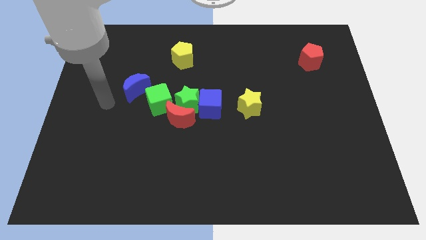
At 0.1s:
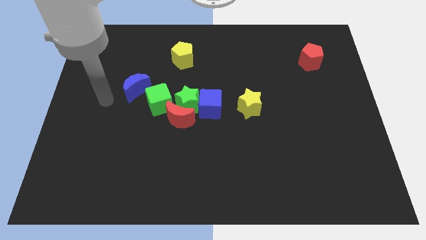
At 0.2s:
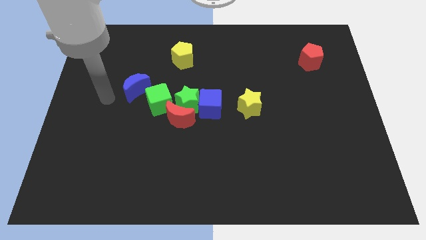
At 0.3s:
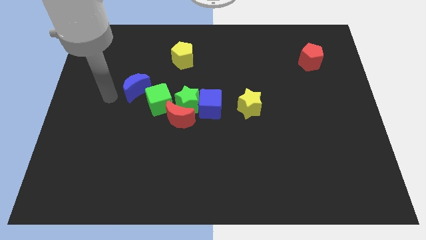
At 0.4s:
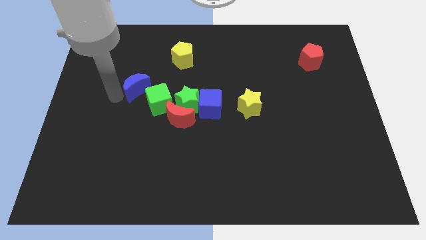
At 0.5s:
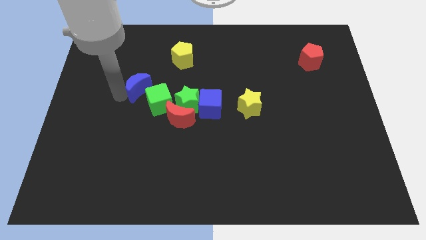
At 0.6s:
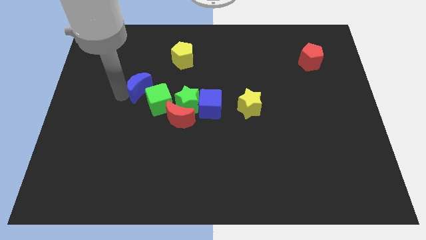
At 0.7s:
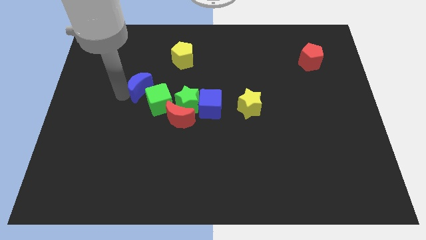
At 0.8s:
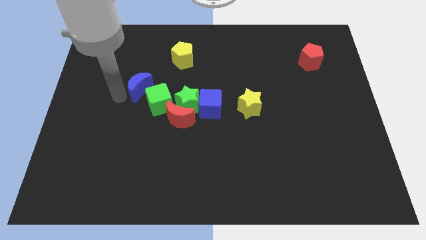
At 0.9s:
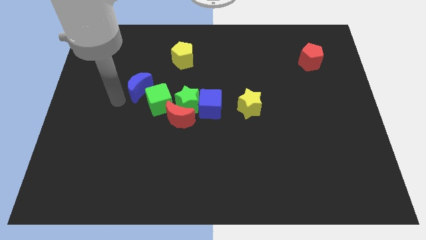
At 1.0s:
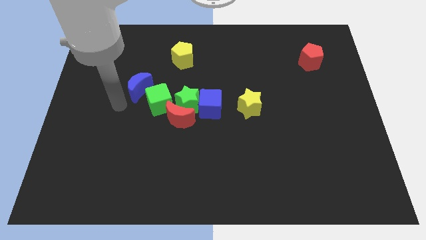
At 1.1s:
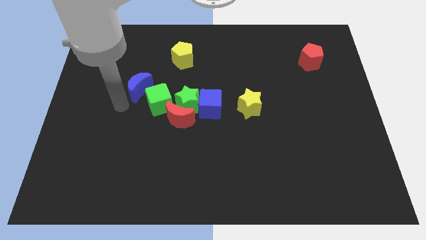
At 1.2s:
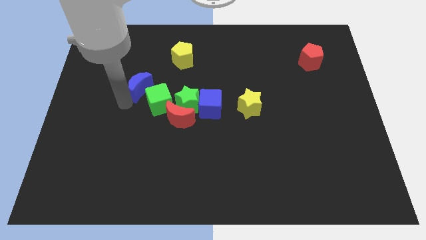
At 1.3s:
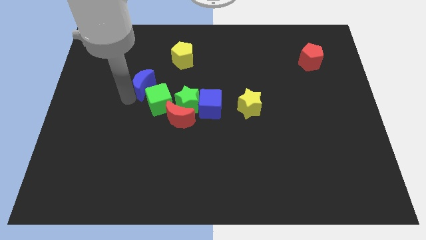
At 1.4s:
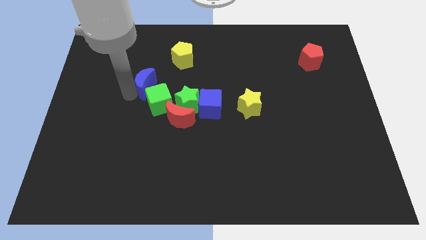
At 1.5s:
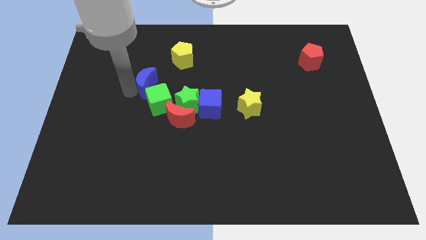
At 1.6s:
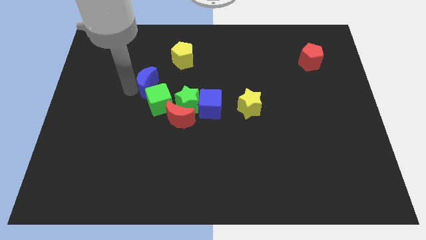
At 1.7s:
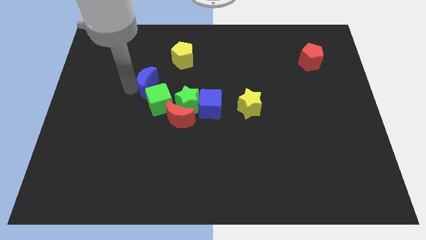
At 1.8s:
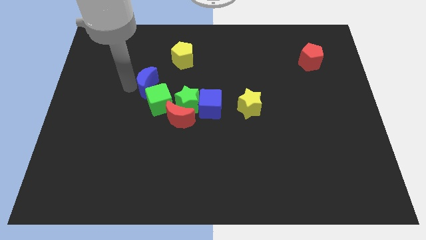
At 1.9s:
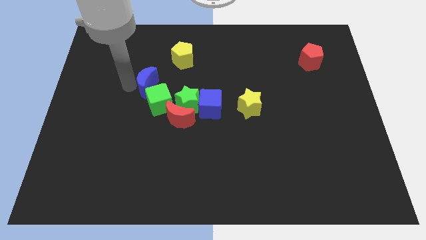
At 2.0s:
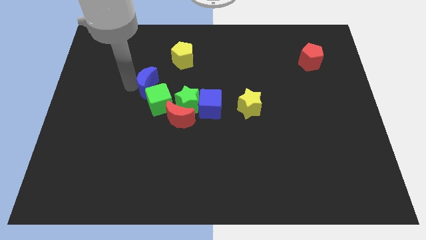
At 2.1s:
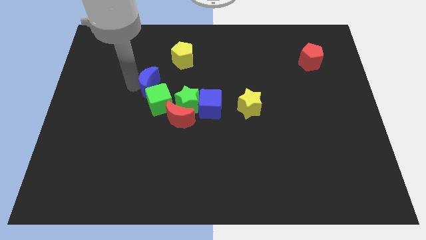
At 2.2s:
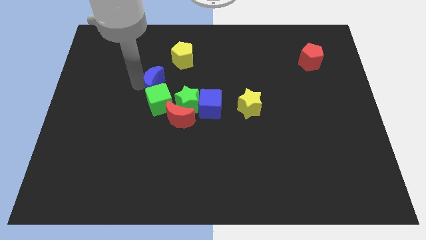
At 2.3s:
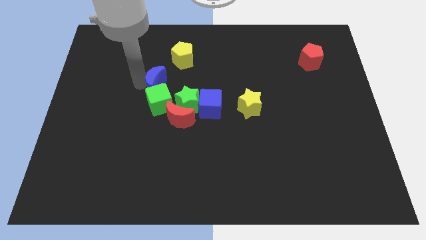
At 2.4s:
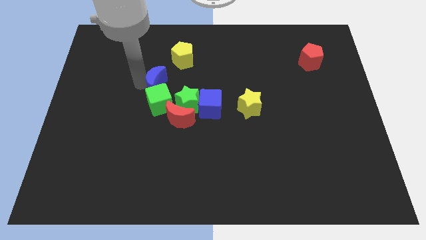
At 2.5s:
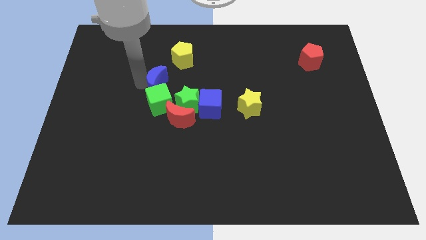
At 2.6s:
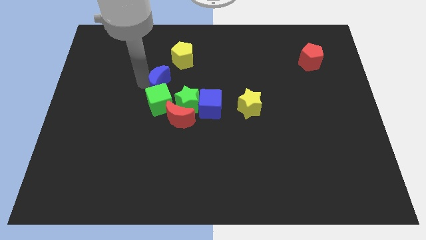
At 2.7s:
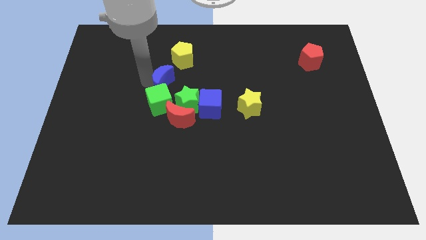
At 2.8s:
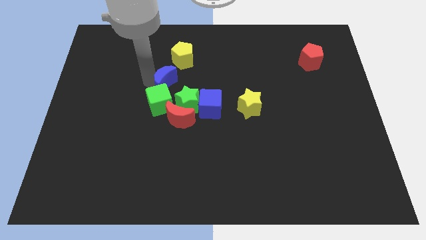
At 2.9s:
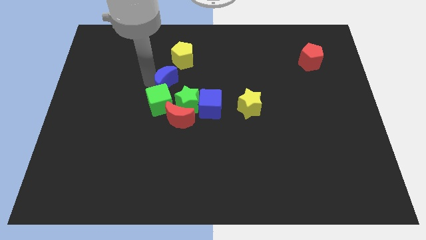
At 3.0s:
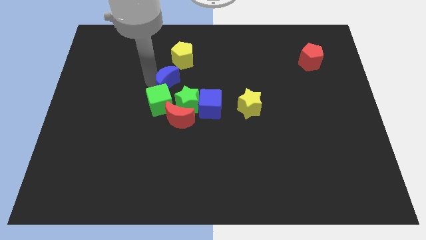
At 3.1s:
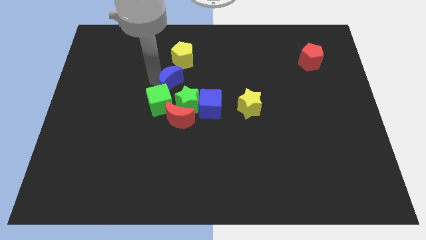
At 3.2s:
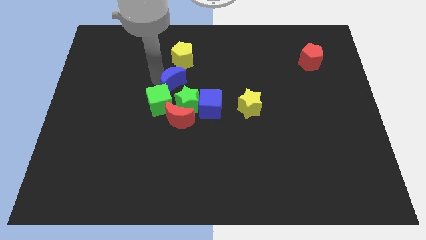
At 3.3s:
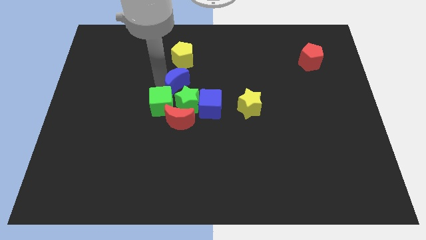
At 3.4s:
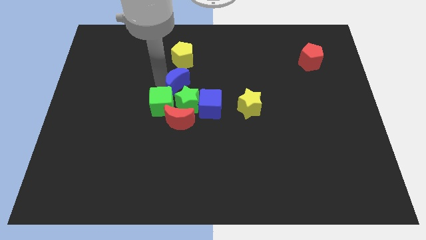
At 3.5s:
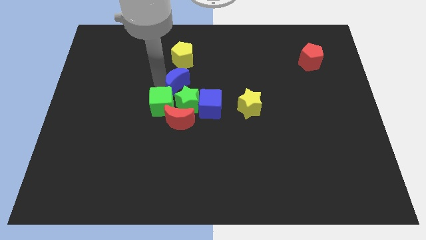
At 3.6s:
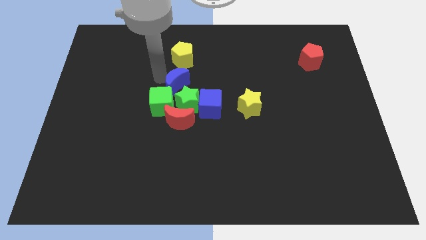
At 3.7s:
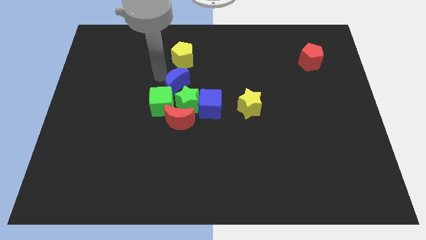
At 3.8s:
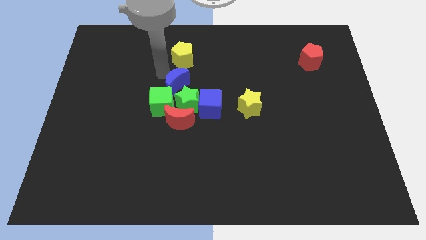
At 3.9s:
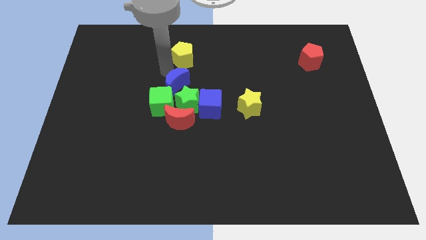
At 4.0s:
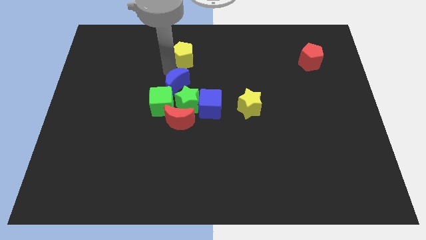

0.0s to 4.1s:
move the blue moon below the yellow pentagon

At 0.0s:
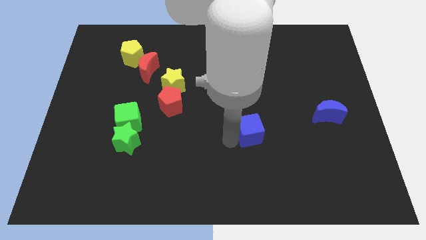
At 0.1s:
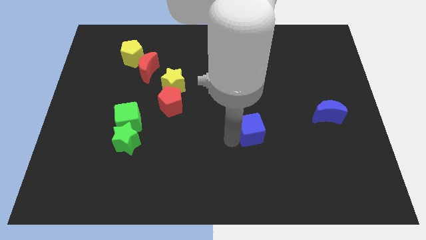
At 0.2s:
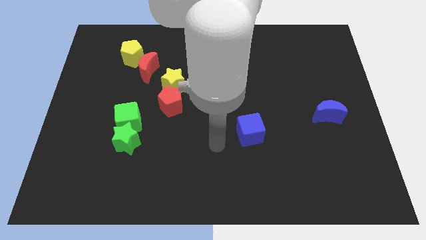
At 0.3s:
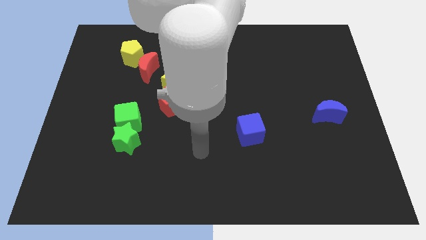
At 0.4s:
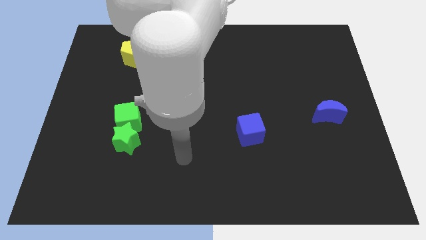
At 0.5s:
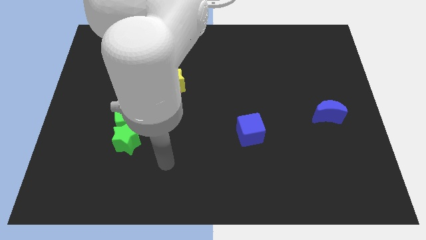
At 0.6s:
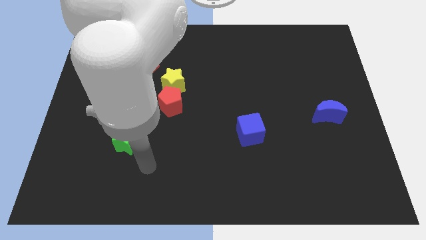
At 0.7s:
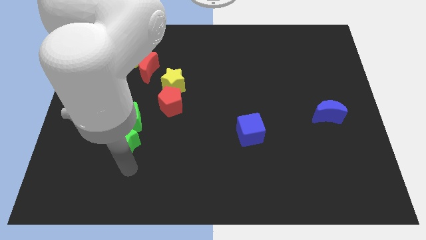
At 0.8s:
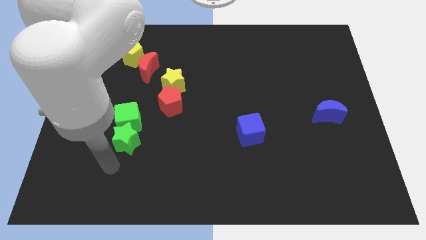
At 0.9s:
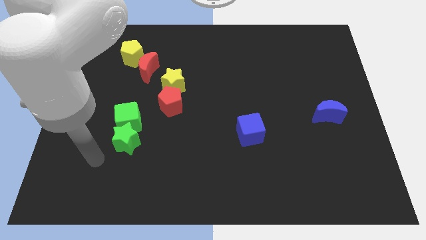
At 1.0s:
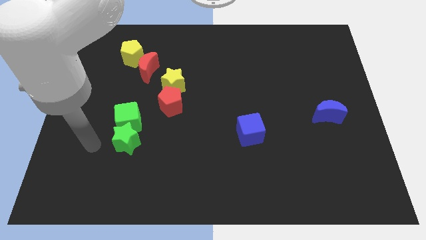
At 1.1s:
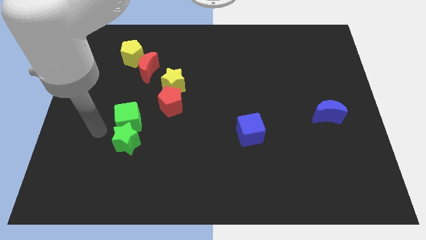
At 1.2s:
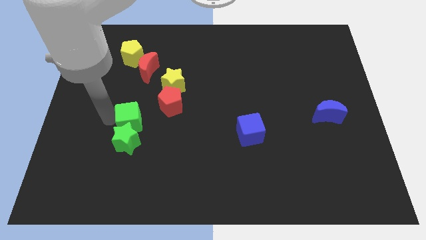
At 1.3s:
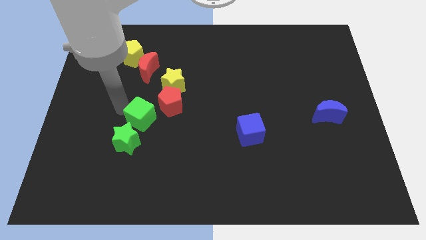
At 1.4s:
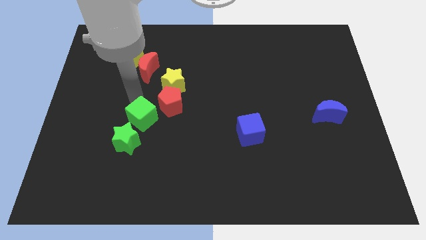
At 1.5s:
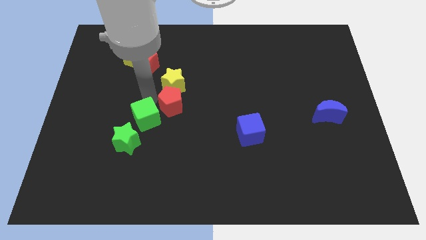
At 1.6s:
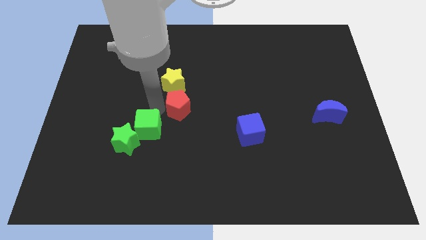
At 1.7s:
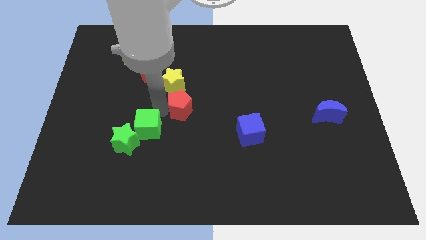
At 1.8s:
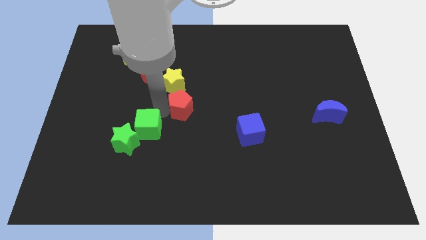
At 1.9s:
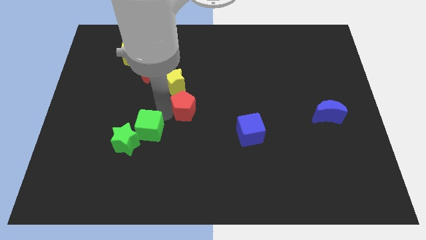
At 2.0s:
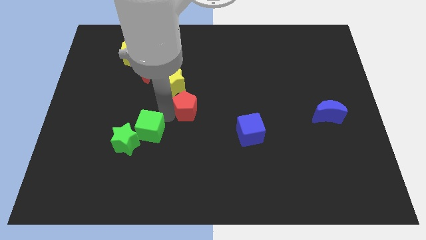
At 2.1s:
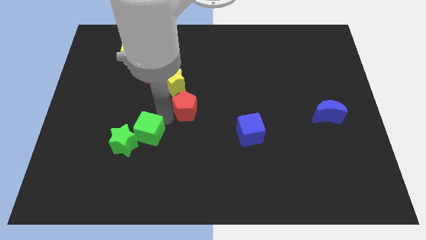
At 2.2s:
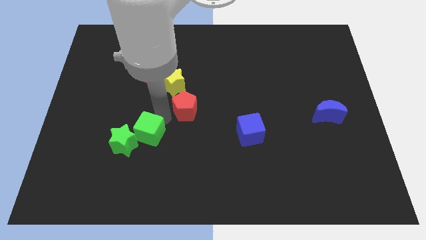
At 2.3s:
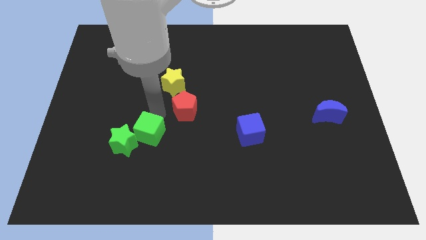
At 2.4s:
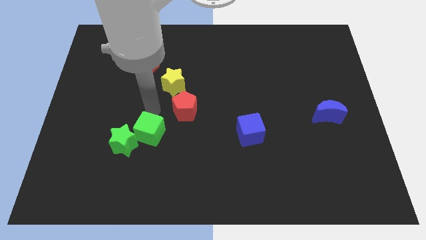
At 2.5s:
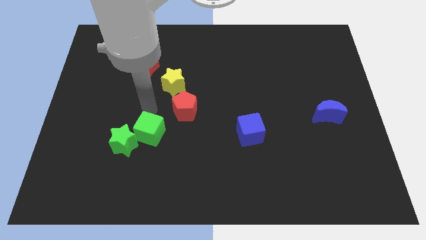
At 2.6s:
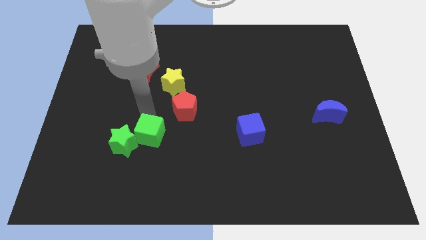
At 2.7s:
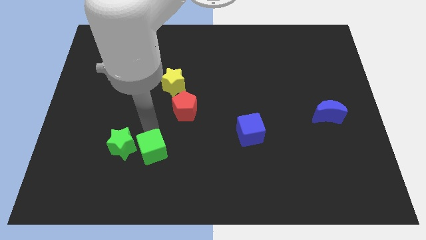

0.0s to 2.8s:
place the green cube right to the green star

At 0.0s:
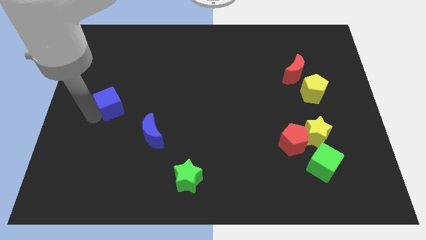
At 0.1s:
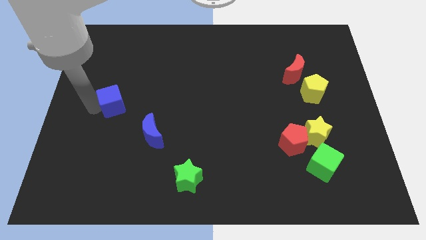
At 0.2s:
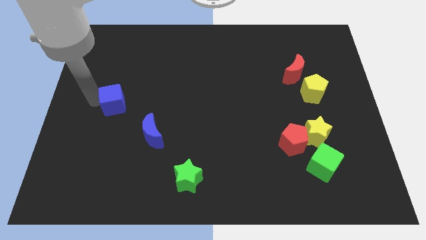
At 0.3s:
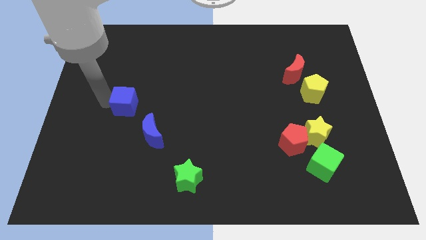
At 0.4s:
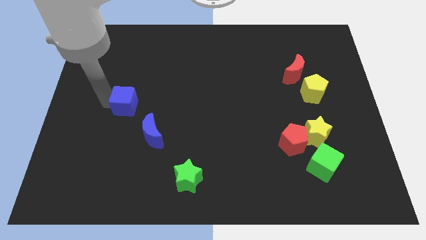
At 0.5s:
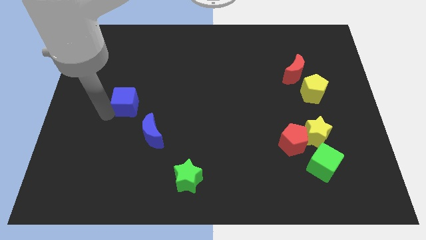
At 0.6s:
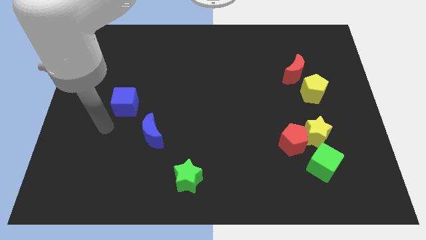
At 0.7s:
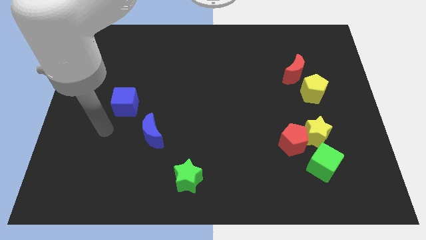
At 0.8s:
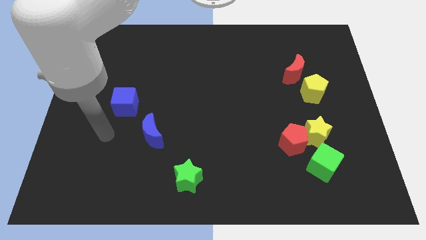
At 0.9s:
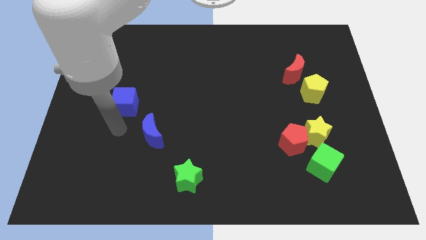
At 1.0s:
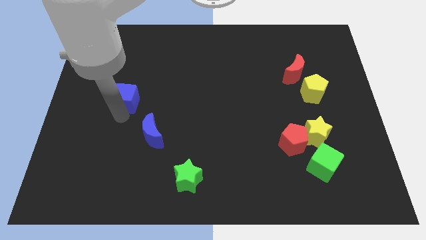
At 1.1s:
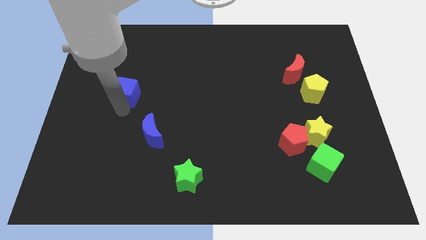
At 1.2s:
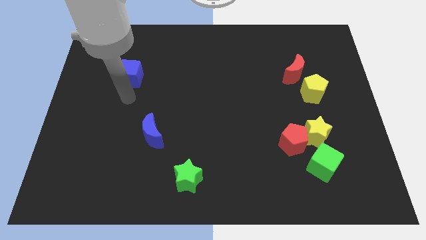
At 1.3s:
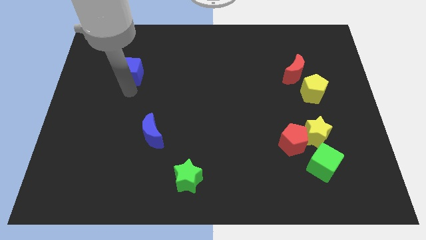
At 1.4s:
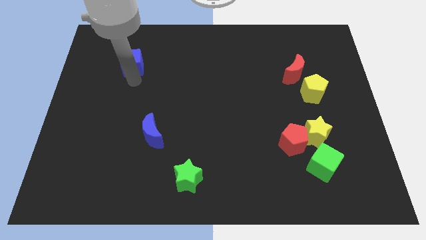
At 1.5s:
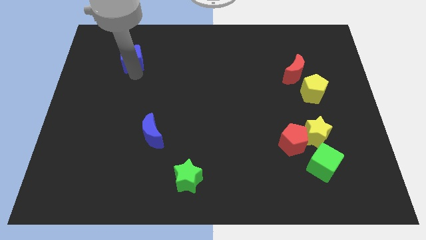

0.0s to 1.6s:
push the blue cube towards up

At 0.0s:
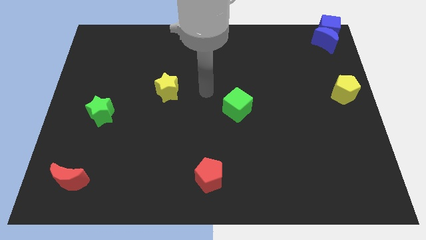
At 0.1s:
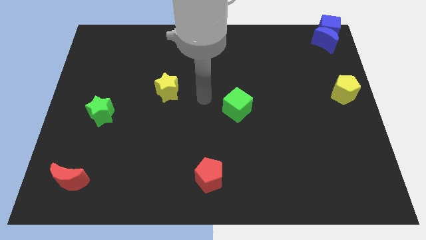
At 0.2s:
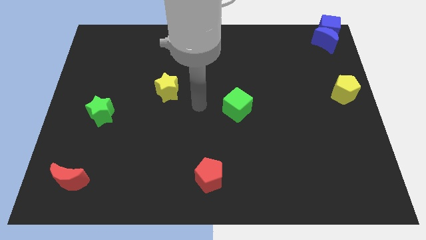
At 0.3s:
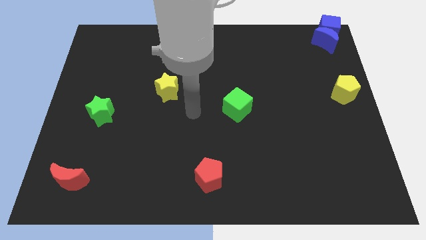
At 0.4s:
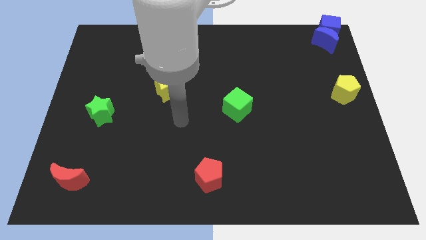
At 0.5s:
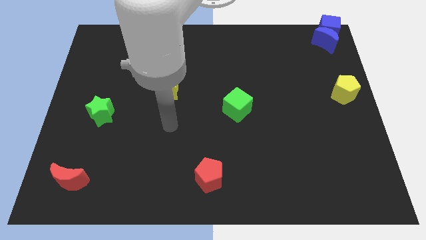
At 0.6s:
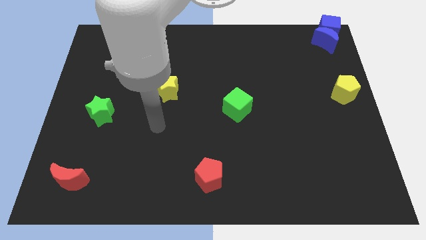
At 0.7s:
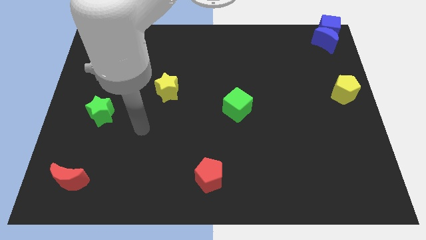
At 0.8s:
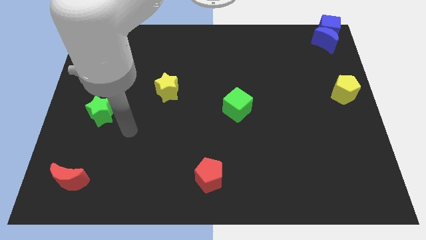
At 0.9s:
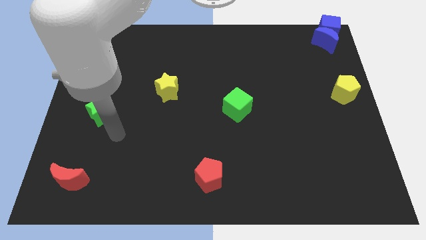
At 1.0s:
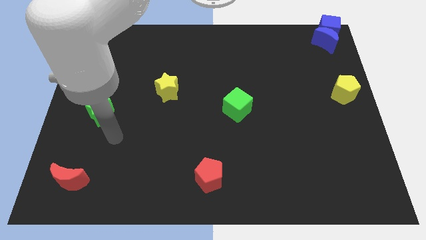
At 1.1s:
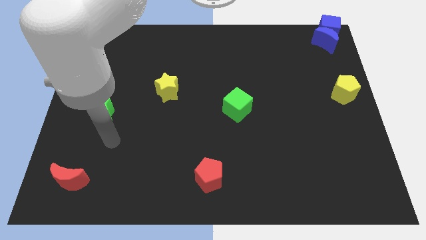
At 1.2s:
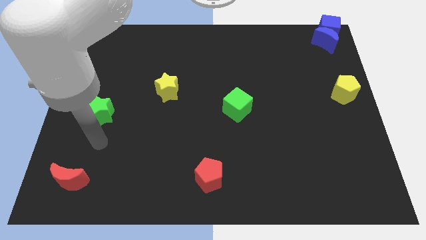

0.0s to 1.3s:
move your arm to the bottom of green star
